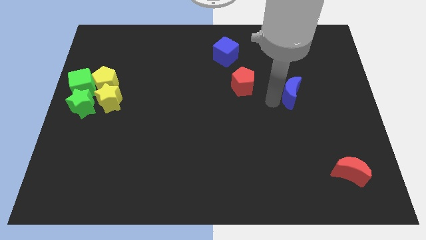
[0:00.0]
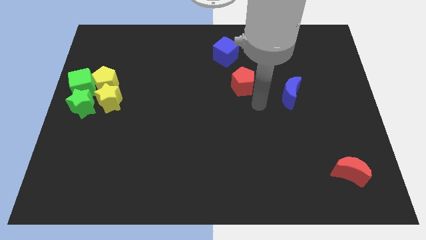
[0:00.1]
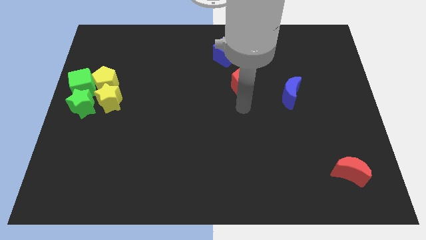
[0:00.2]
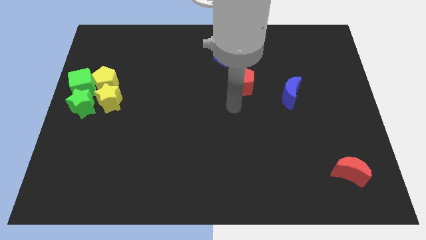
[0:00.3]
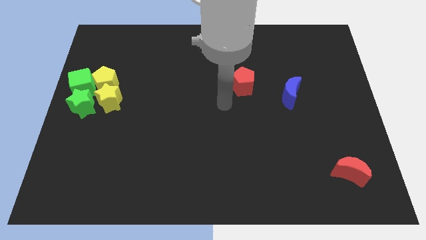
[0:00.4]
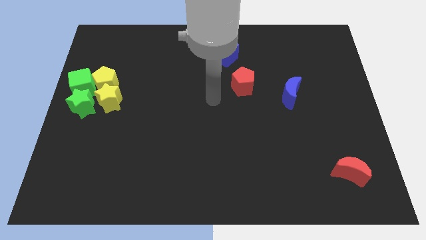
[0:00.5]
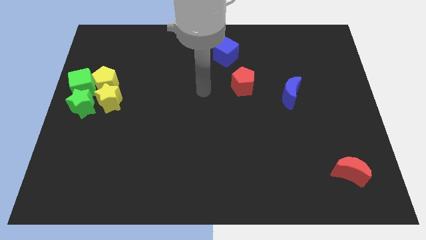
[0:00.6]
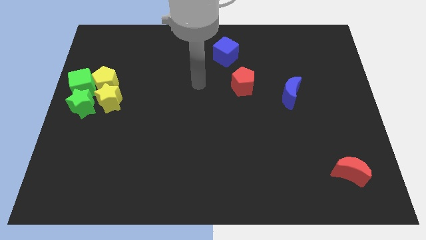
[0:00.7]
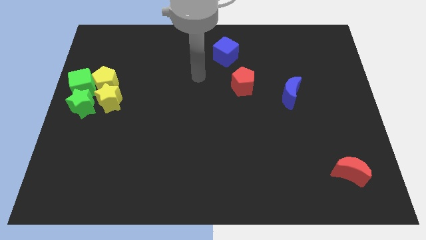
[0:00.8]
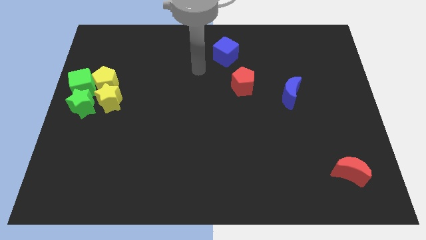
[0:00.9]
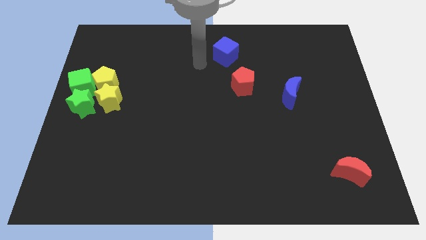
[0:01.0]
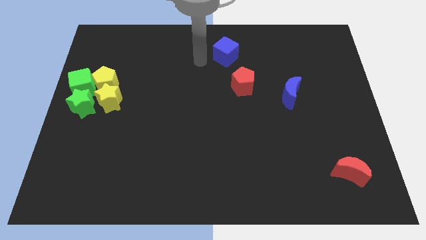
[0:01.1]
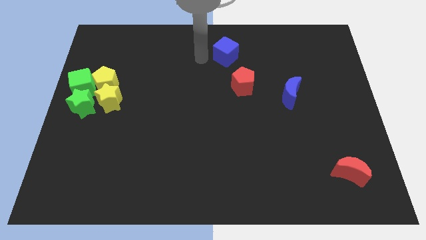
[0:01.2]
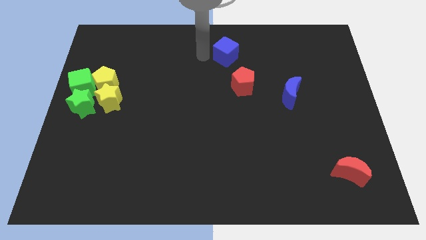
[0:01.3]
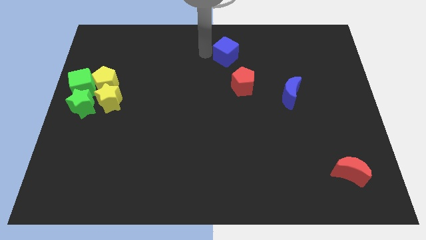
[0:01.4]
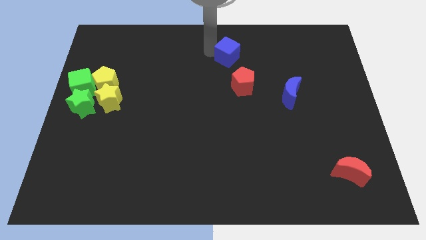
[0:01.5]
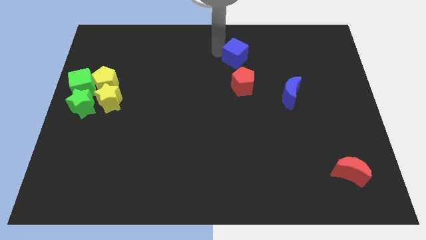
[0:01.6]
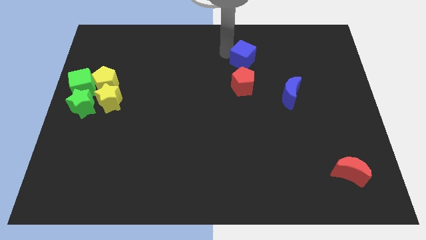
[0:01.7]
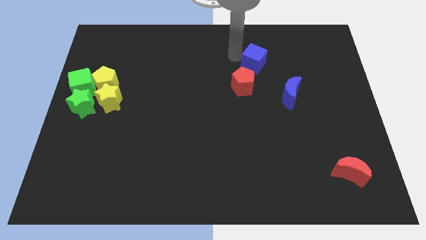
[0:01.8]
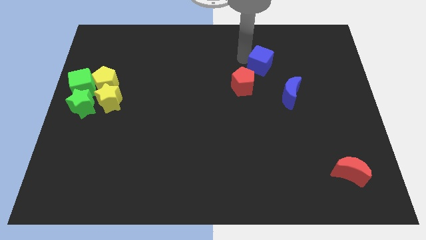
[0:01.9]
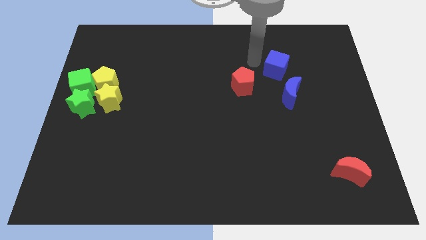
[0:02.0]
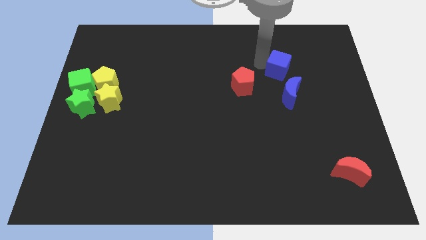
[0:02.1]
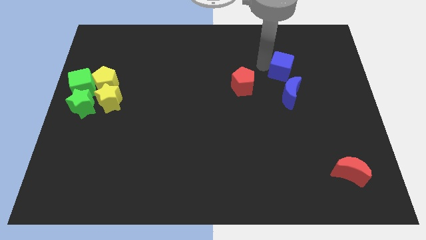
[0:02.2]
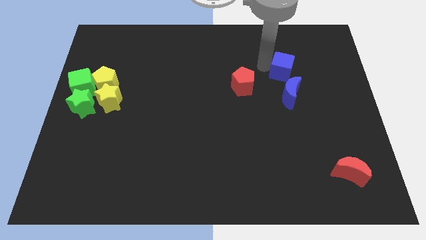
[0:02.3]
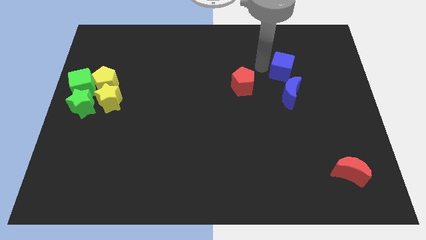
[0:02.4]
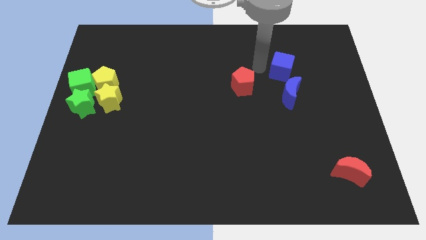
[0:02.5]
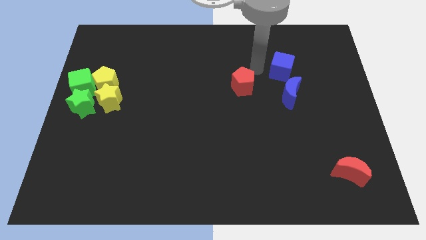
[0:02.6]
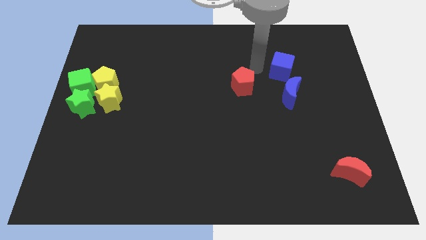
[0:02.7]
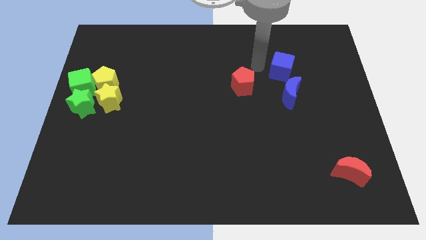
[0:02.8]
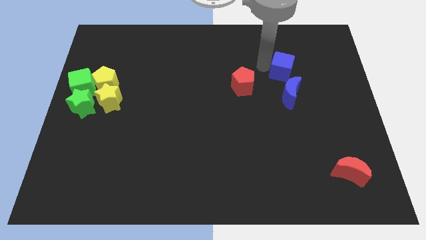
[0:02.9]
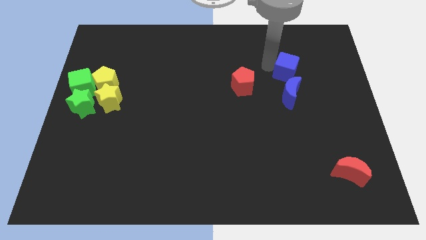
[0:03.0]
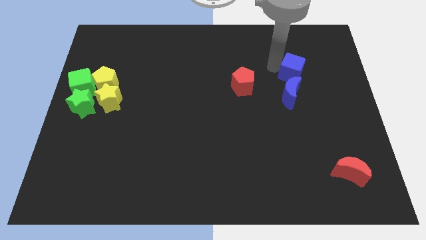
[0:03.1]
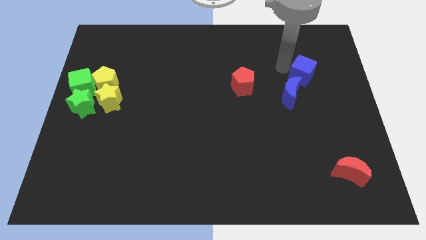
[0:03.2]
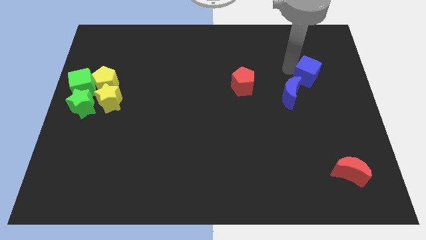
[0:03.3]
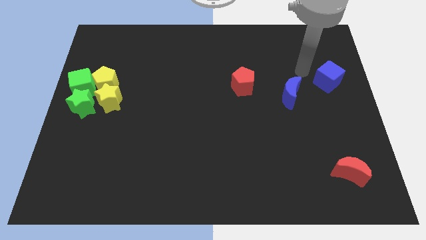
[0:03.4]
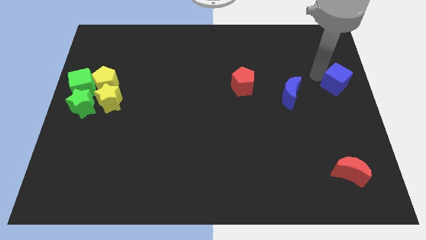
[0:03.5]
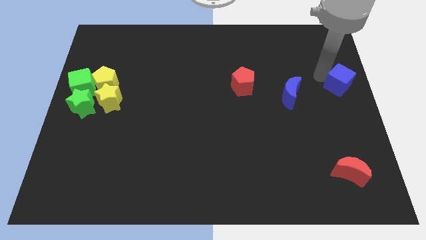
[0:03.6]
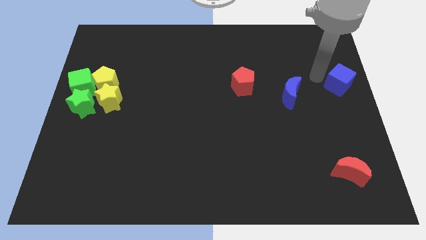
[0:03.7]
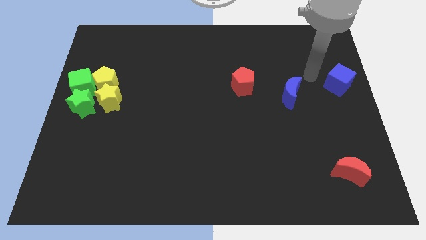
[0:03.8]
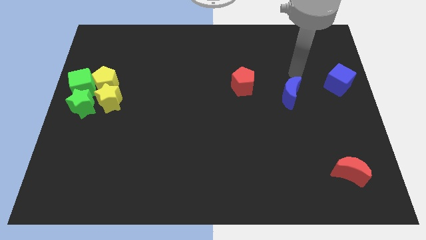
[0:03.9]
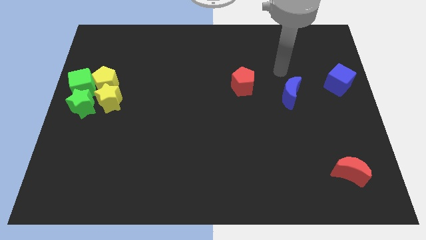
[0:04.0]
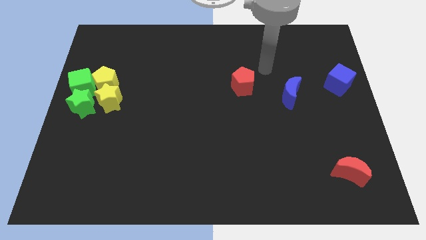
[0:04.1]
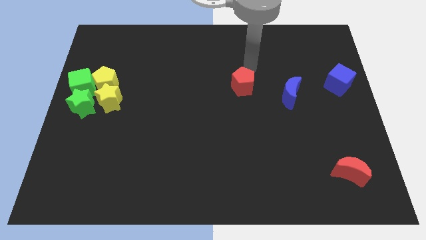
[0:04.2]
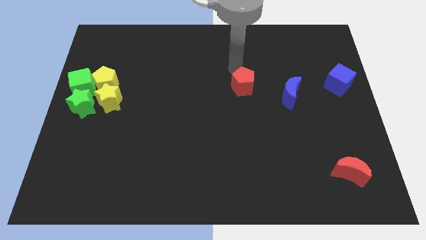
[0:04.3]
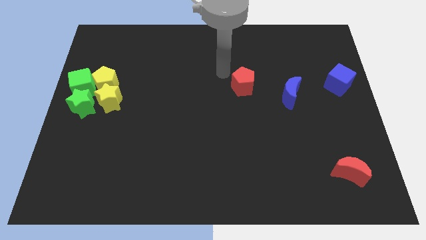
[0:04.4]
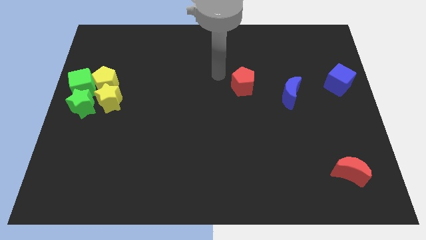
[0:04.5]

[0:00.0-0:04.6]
push the blue cube to the top right of the blue crescent

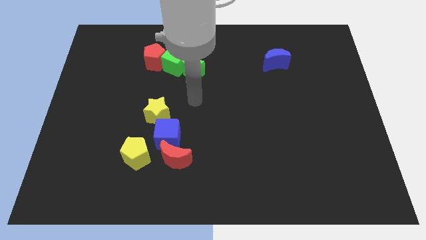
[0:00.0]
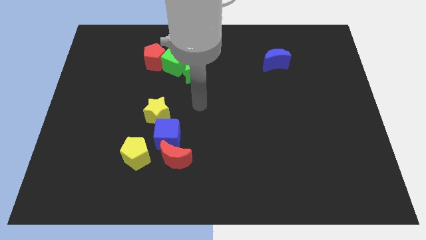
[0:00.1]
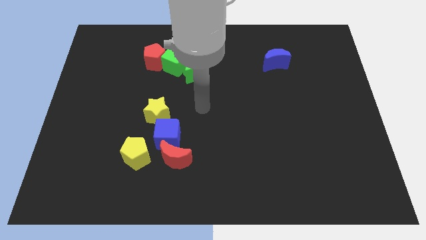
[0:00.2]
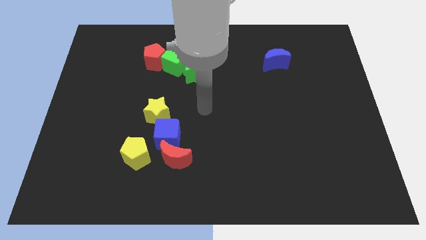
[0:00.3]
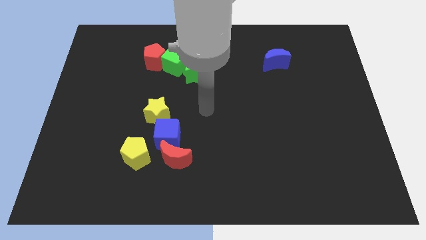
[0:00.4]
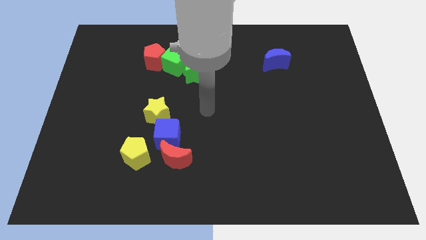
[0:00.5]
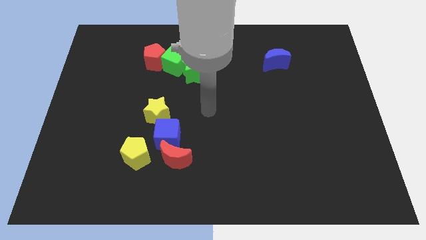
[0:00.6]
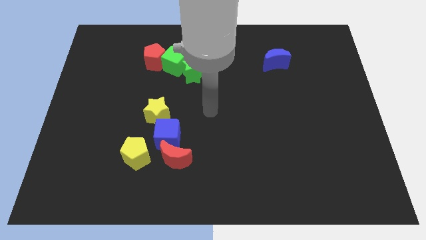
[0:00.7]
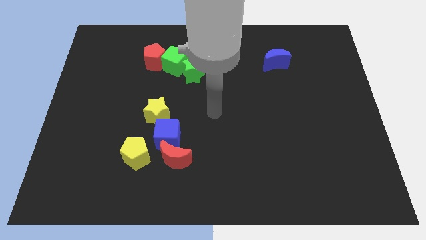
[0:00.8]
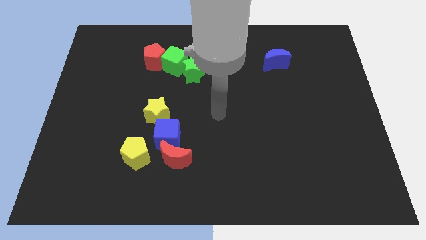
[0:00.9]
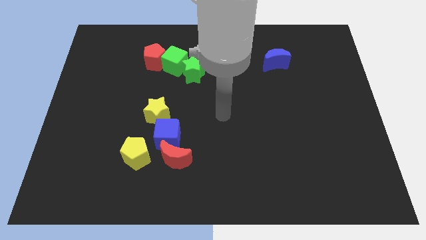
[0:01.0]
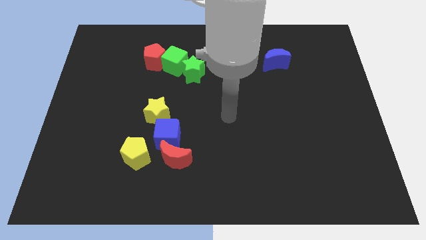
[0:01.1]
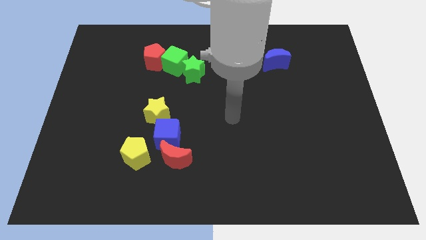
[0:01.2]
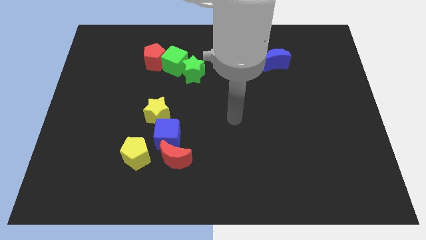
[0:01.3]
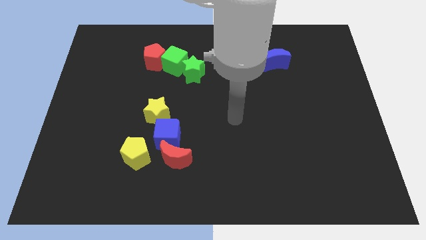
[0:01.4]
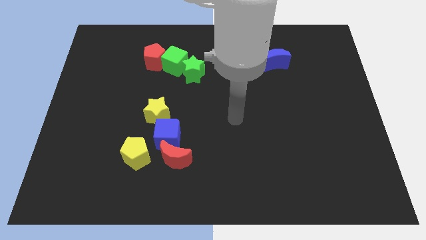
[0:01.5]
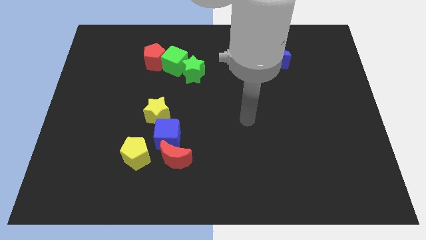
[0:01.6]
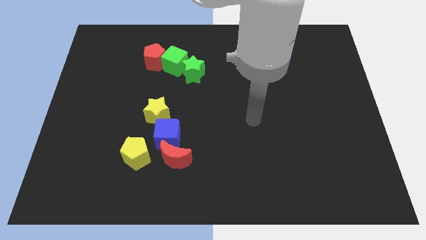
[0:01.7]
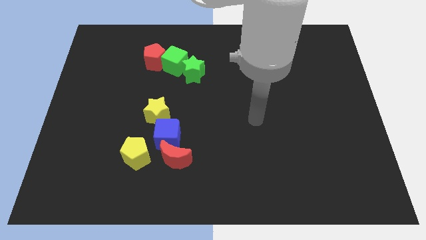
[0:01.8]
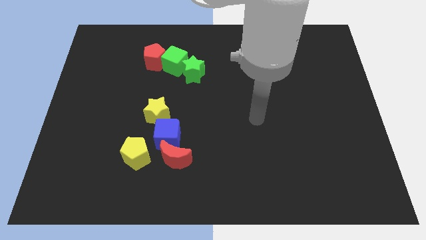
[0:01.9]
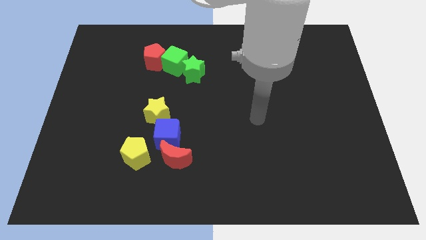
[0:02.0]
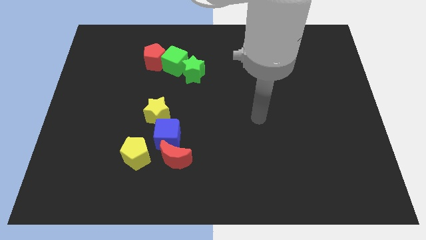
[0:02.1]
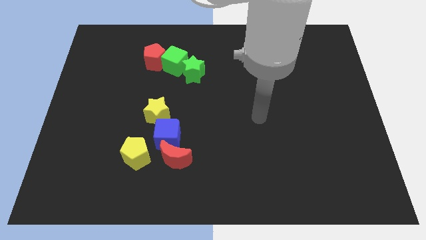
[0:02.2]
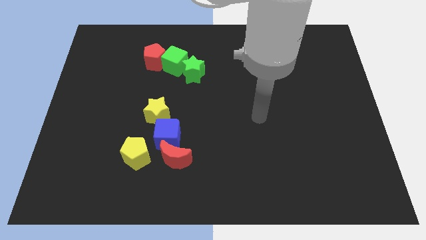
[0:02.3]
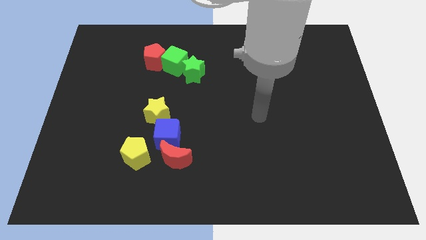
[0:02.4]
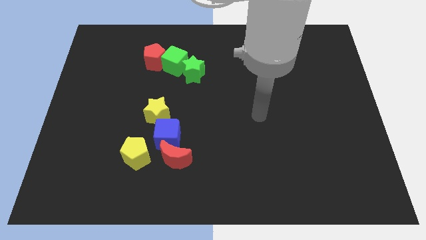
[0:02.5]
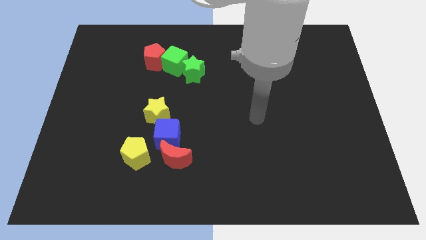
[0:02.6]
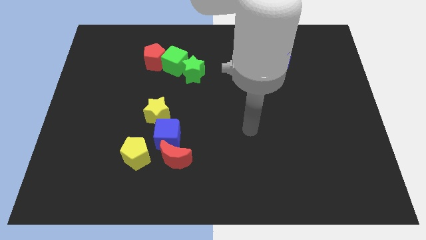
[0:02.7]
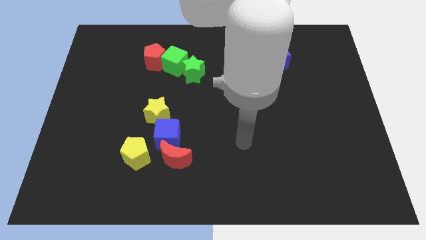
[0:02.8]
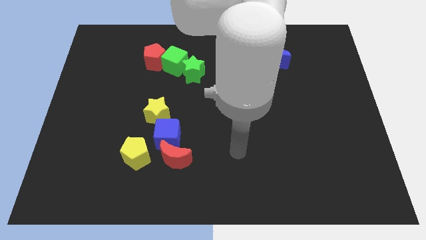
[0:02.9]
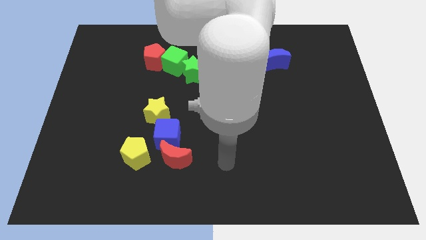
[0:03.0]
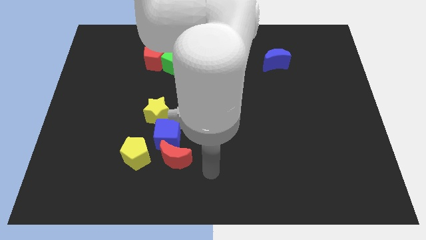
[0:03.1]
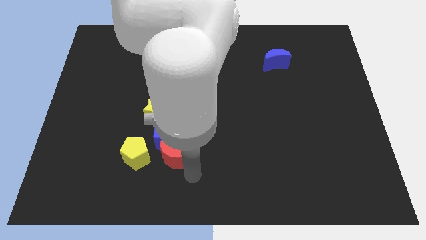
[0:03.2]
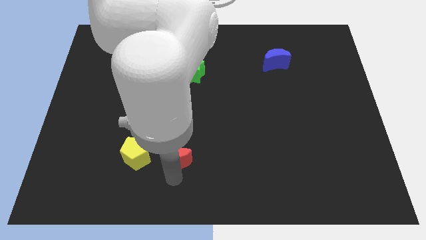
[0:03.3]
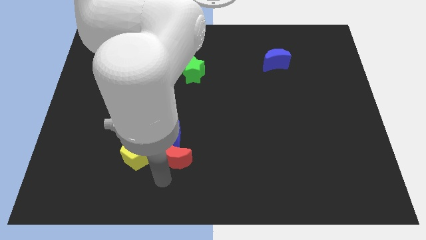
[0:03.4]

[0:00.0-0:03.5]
move your arm below the red crescent

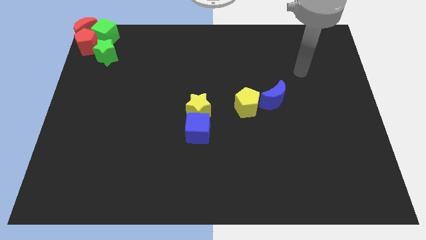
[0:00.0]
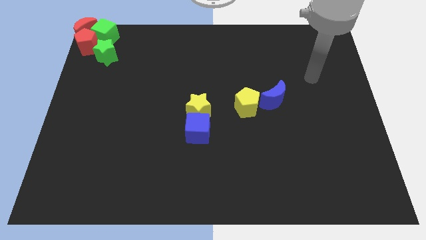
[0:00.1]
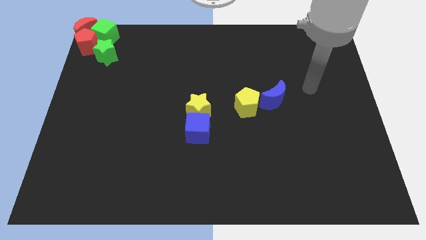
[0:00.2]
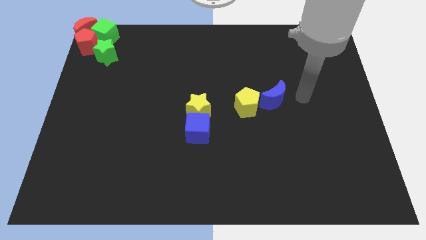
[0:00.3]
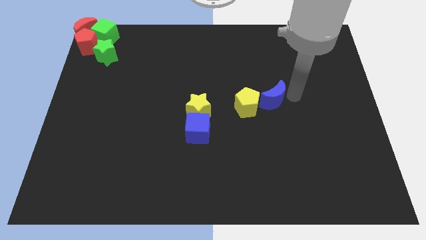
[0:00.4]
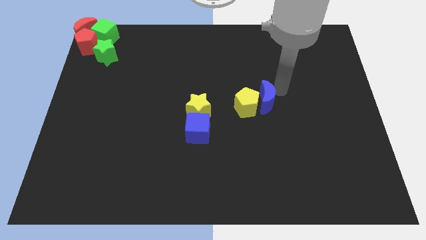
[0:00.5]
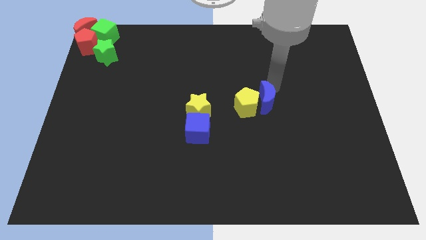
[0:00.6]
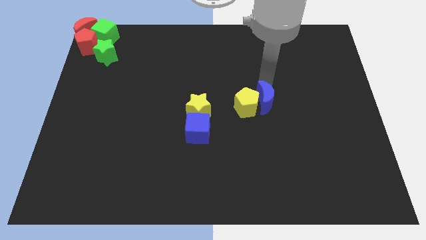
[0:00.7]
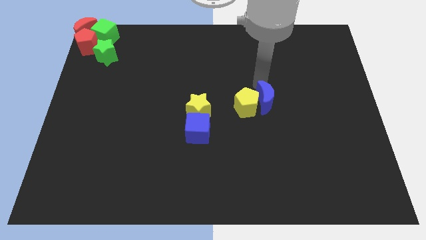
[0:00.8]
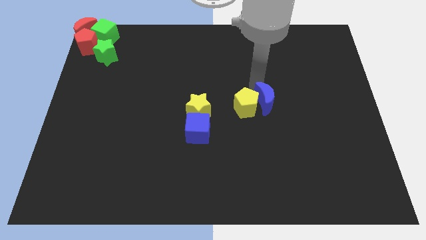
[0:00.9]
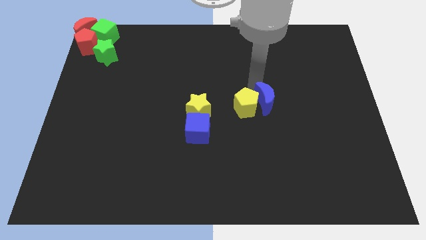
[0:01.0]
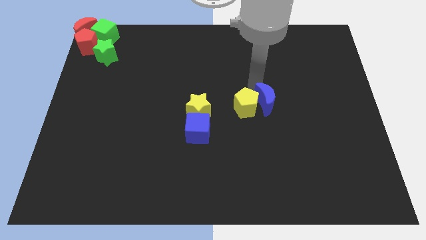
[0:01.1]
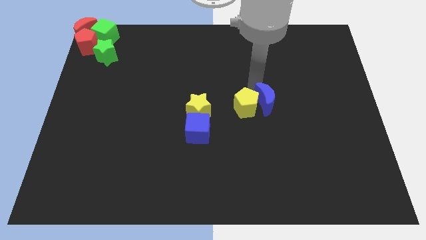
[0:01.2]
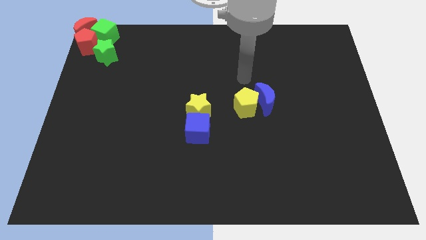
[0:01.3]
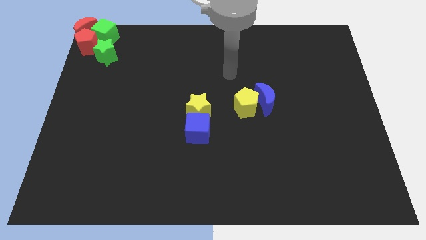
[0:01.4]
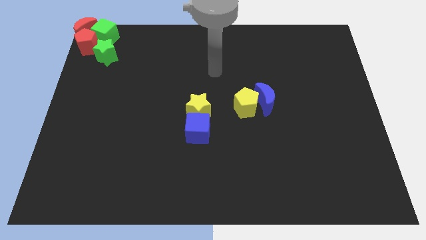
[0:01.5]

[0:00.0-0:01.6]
move the blue crescent into the yellow pentagon
